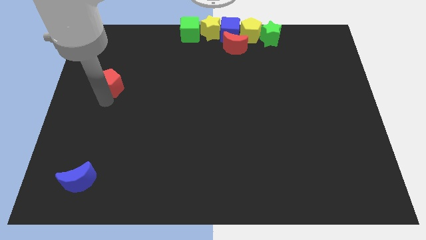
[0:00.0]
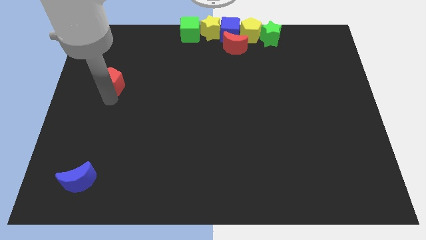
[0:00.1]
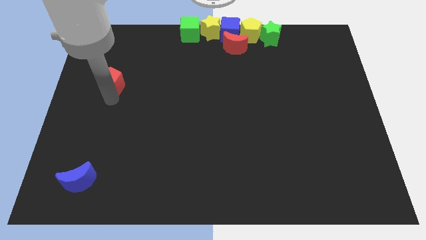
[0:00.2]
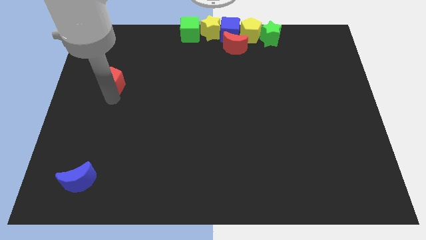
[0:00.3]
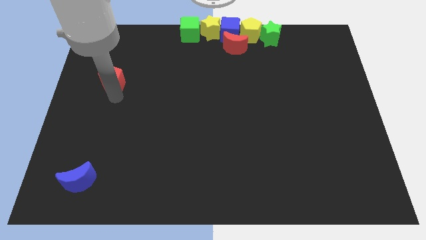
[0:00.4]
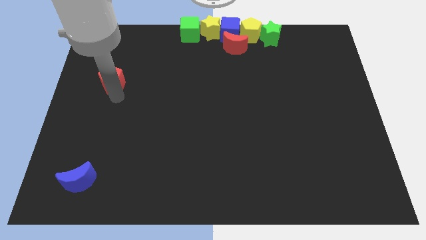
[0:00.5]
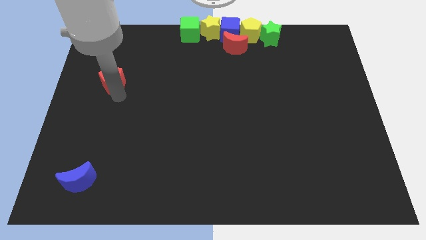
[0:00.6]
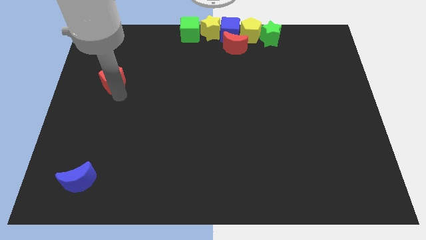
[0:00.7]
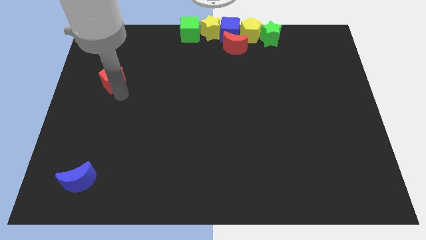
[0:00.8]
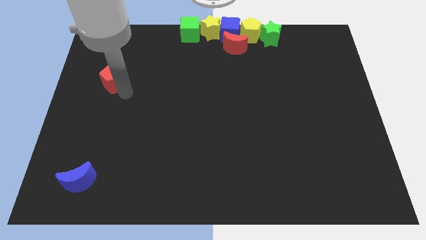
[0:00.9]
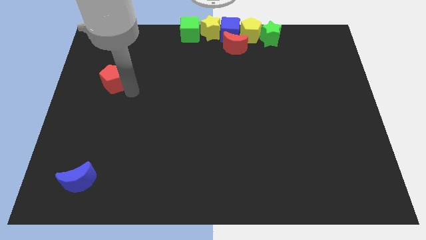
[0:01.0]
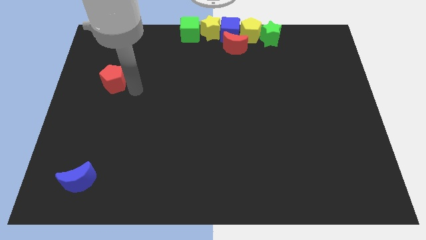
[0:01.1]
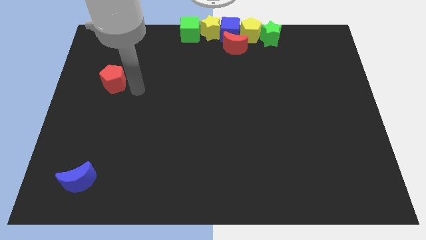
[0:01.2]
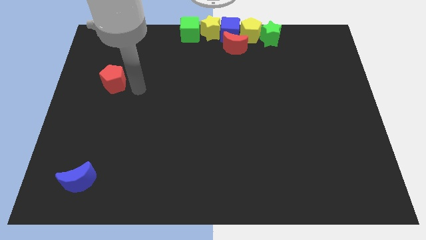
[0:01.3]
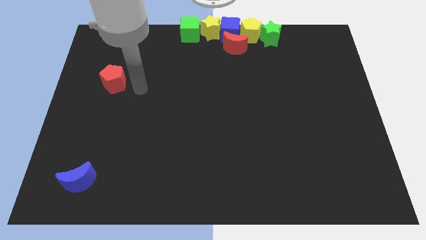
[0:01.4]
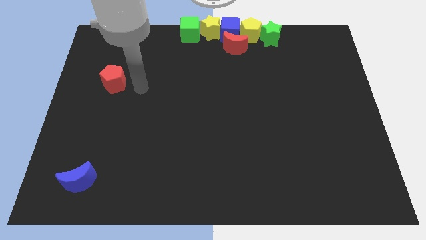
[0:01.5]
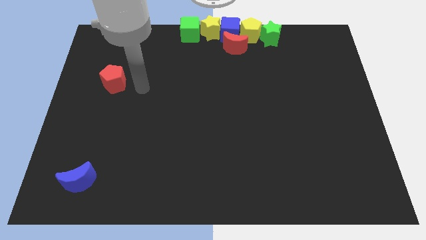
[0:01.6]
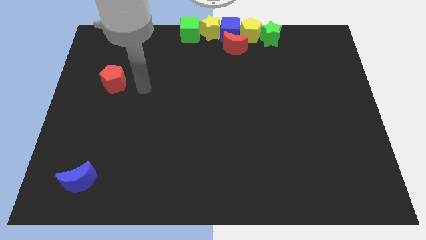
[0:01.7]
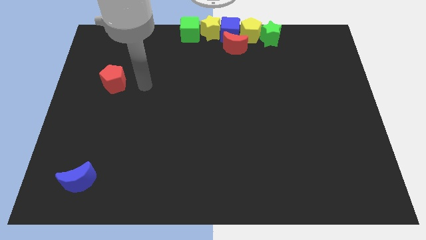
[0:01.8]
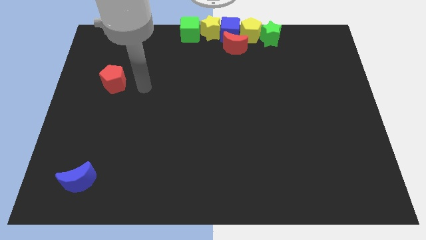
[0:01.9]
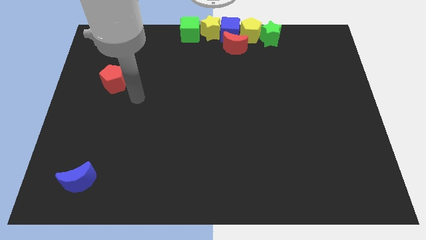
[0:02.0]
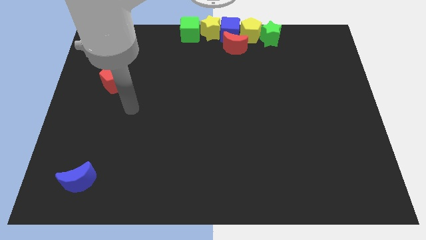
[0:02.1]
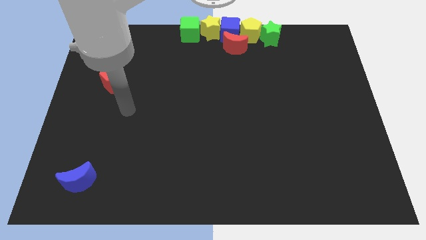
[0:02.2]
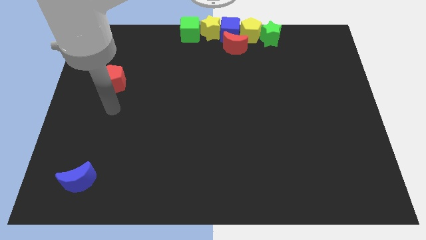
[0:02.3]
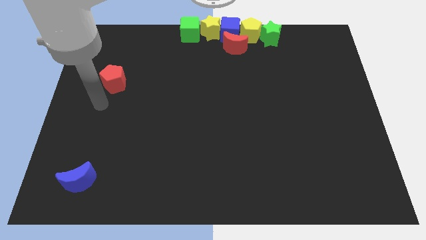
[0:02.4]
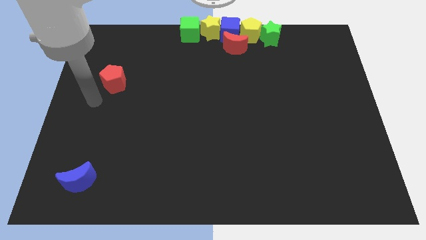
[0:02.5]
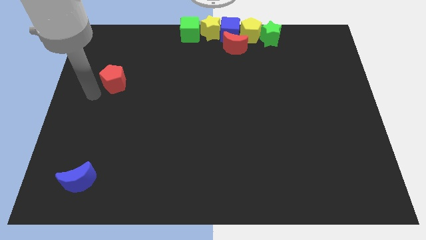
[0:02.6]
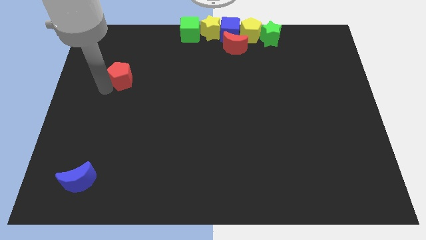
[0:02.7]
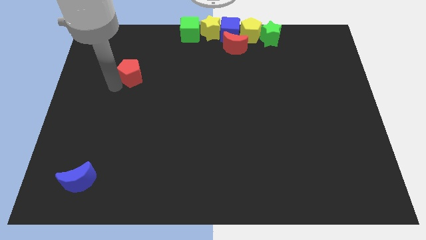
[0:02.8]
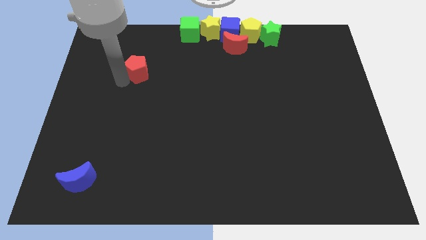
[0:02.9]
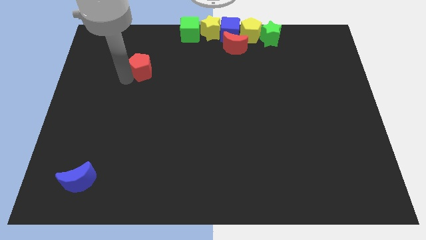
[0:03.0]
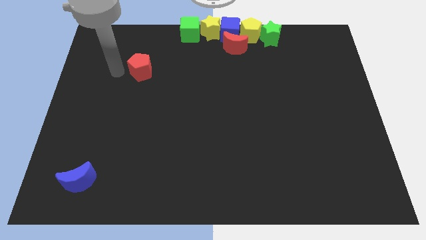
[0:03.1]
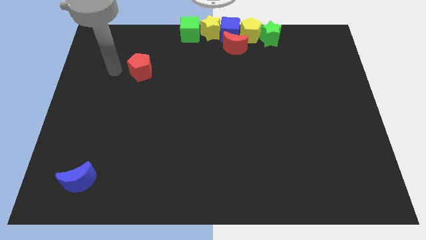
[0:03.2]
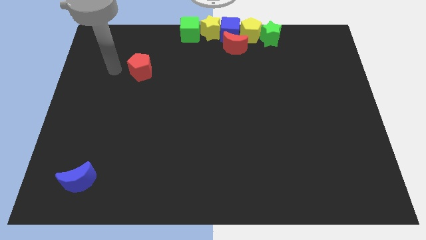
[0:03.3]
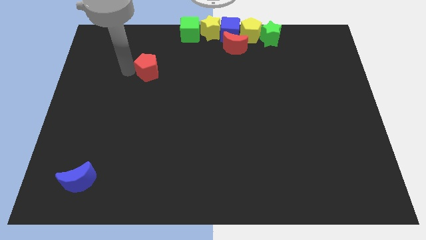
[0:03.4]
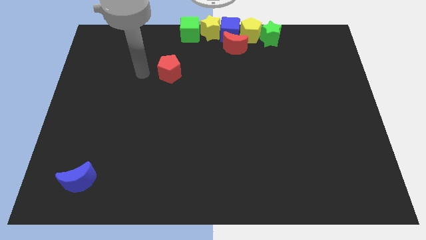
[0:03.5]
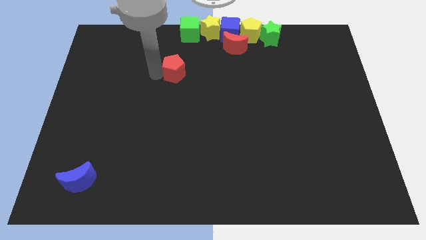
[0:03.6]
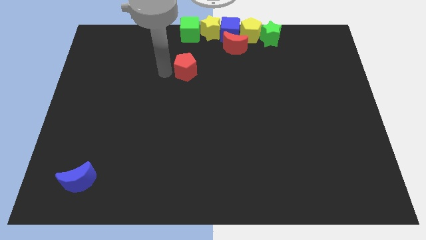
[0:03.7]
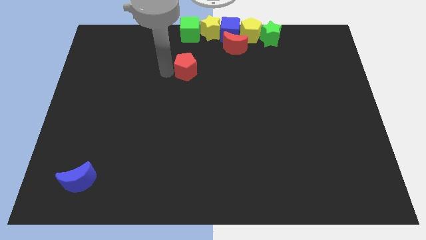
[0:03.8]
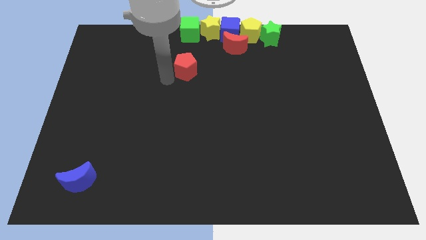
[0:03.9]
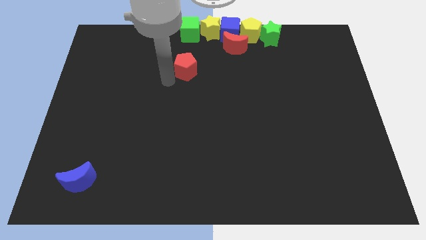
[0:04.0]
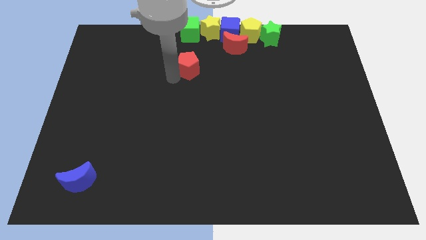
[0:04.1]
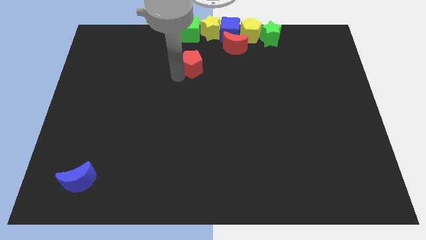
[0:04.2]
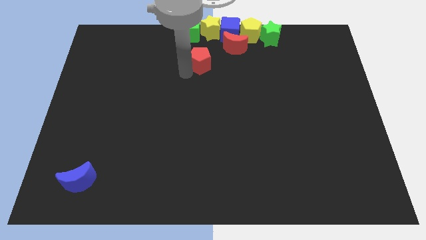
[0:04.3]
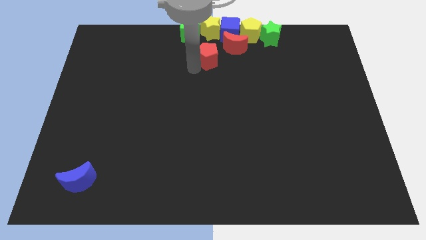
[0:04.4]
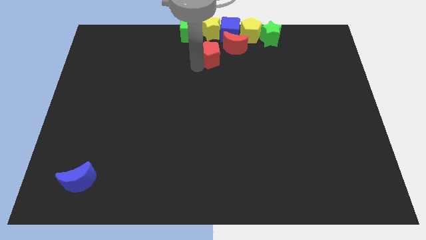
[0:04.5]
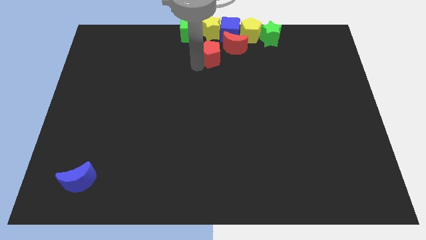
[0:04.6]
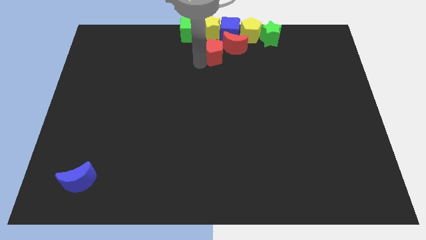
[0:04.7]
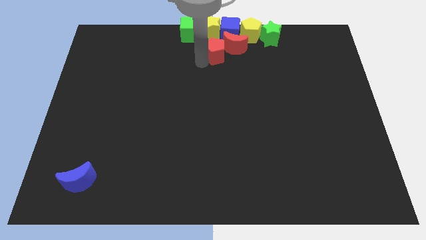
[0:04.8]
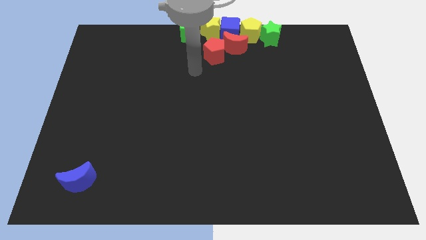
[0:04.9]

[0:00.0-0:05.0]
move the red pentagon to the left of the red crescent

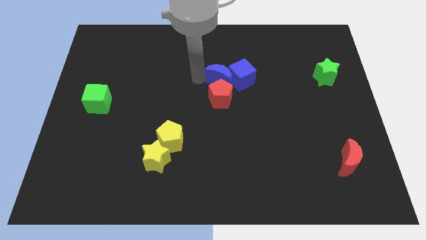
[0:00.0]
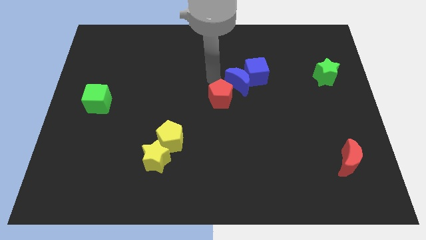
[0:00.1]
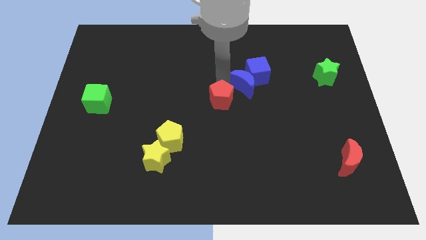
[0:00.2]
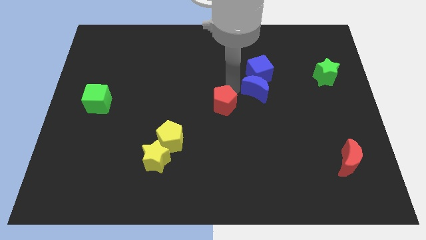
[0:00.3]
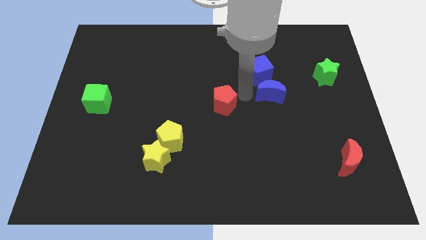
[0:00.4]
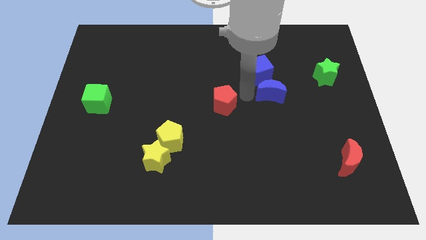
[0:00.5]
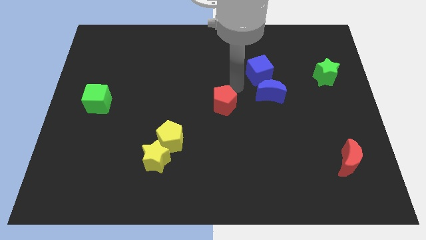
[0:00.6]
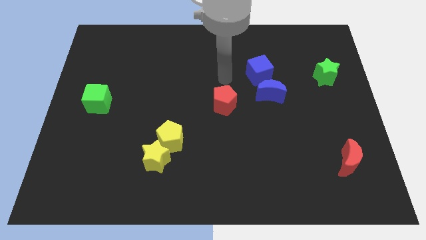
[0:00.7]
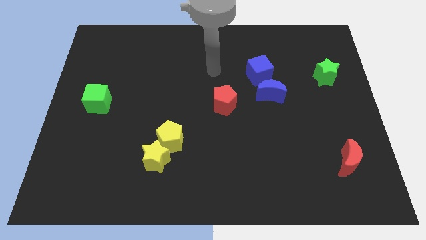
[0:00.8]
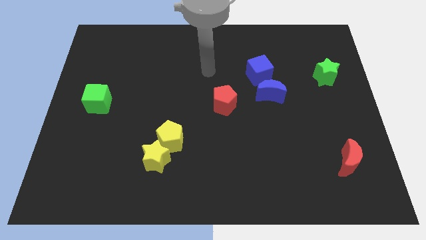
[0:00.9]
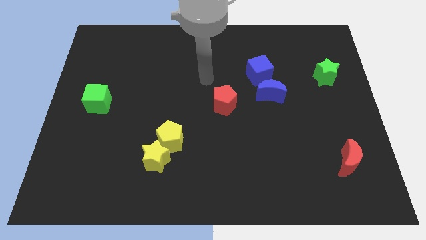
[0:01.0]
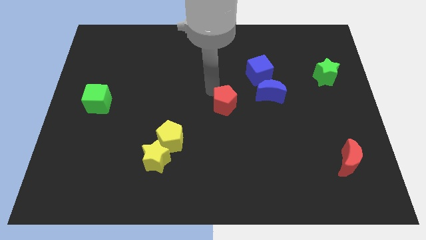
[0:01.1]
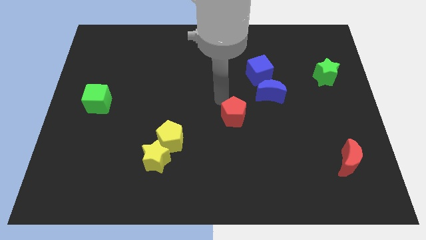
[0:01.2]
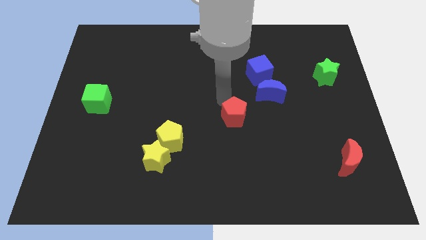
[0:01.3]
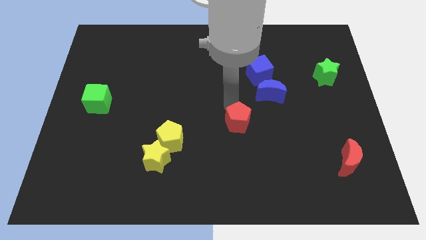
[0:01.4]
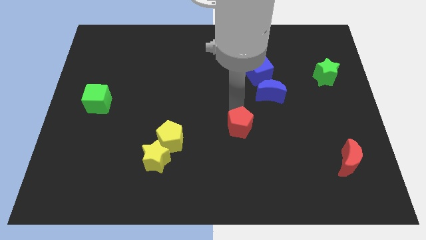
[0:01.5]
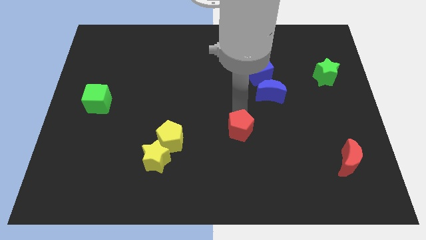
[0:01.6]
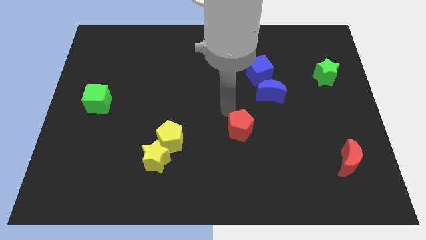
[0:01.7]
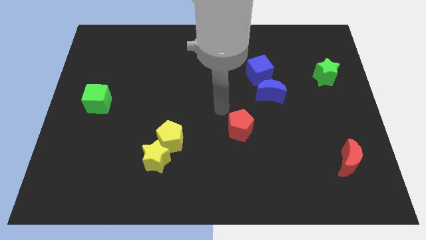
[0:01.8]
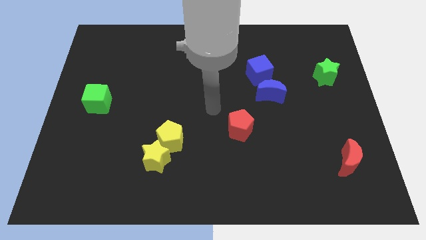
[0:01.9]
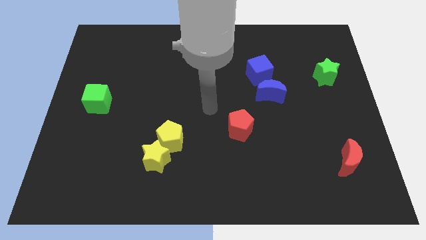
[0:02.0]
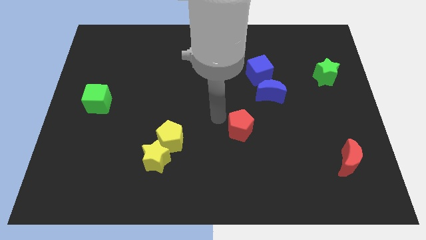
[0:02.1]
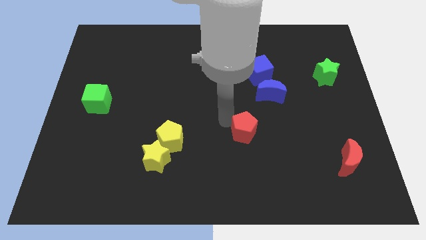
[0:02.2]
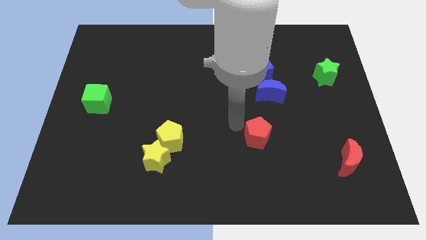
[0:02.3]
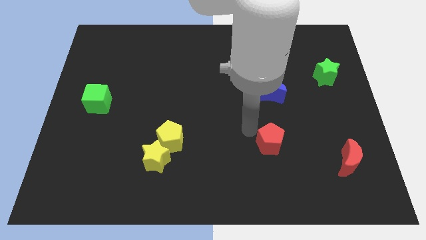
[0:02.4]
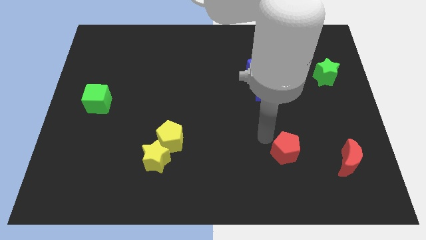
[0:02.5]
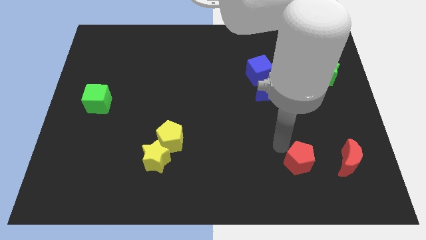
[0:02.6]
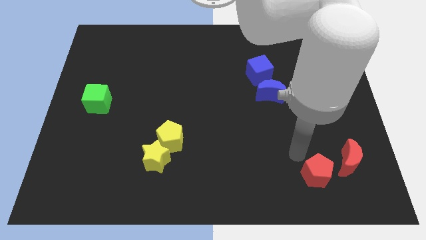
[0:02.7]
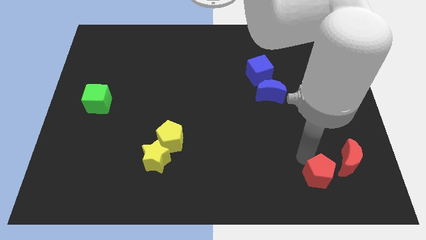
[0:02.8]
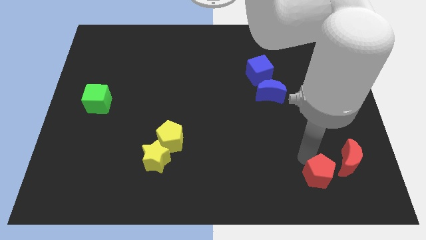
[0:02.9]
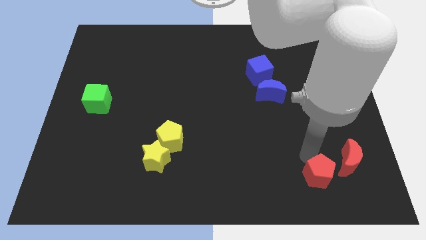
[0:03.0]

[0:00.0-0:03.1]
take the red pentagon close to the red moon

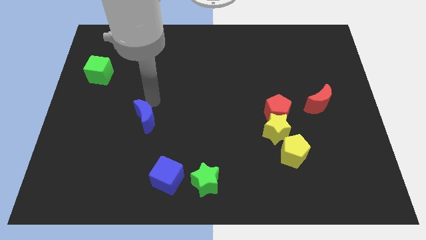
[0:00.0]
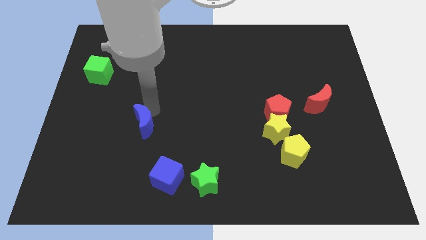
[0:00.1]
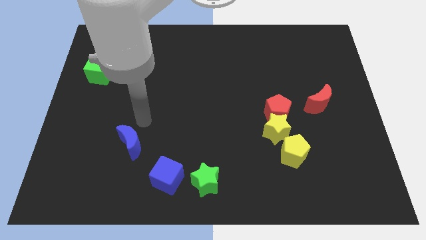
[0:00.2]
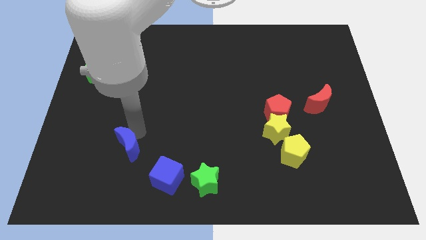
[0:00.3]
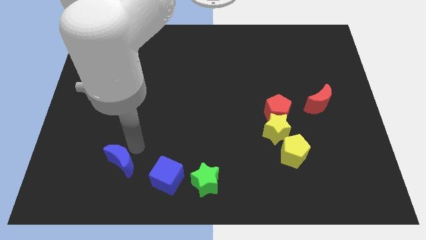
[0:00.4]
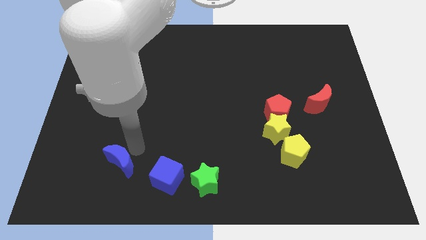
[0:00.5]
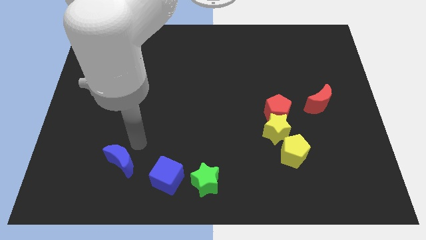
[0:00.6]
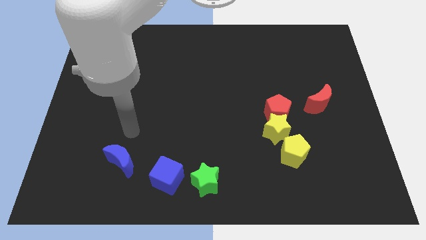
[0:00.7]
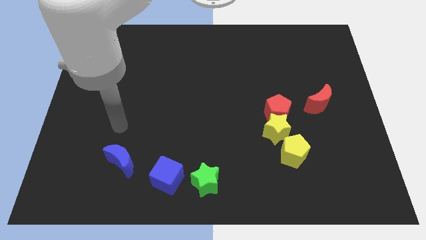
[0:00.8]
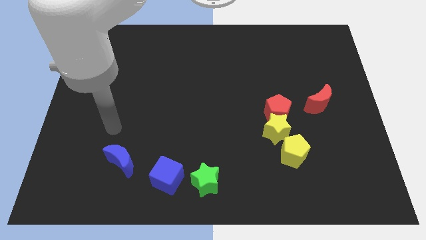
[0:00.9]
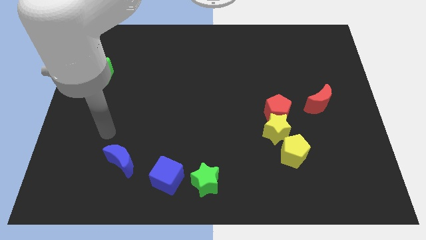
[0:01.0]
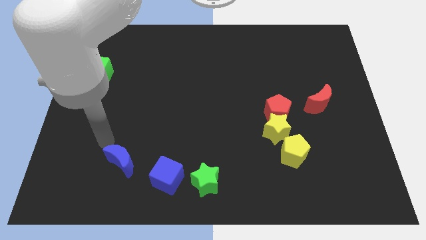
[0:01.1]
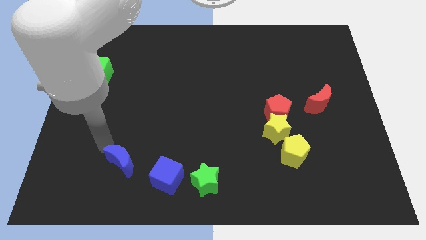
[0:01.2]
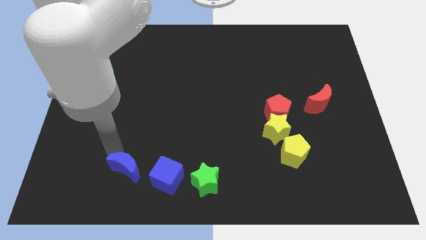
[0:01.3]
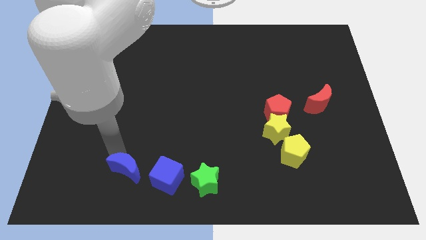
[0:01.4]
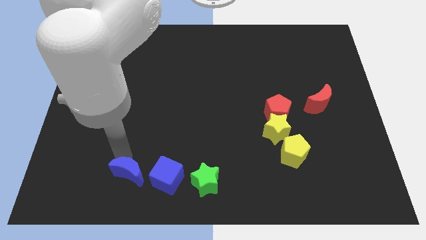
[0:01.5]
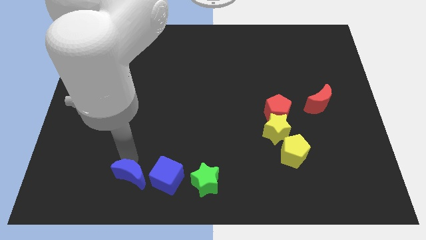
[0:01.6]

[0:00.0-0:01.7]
move the blue crescent to the left side of the blue cube
